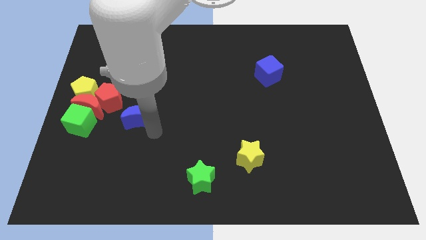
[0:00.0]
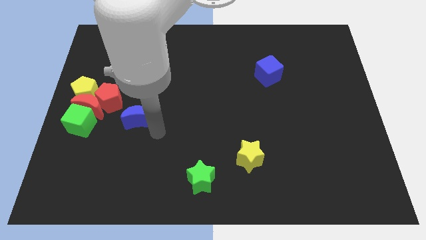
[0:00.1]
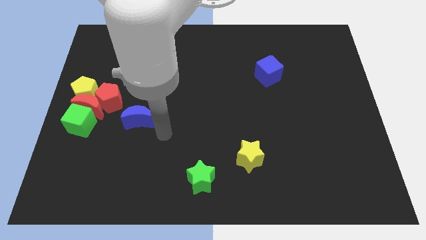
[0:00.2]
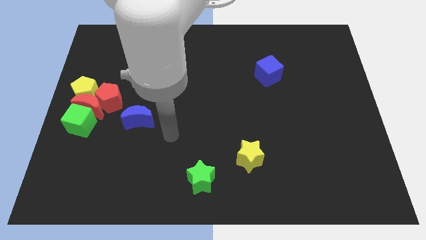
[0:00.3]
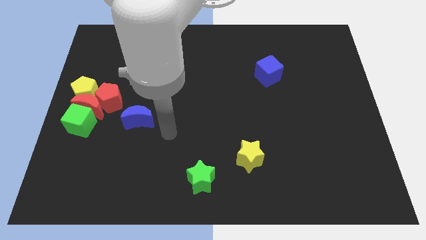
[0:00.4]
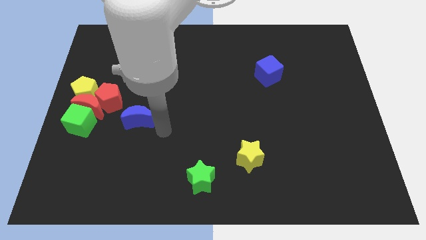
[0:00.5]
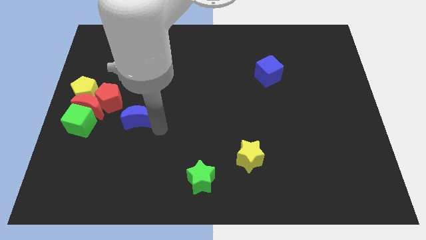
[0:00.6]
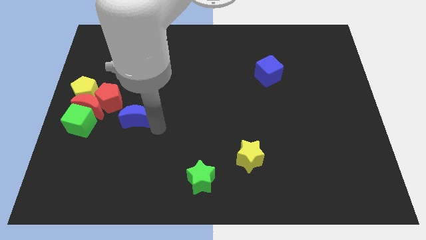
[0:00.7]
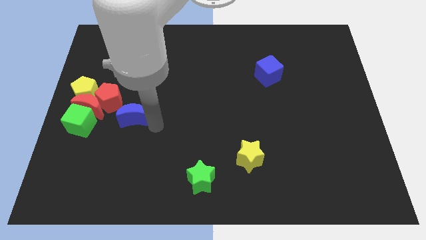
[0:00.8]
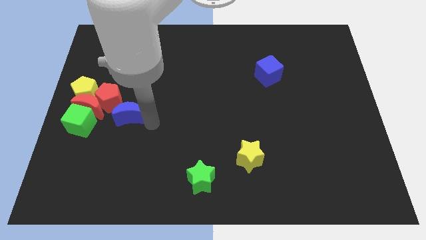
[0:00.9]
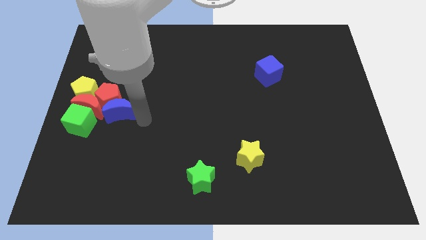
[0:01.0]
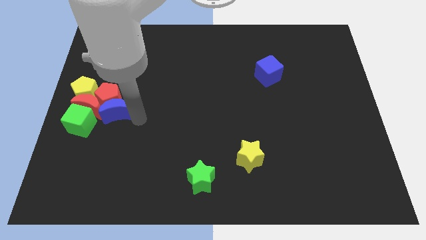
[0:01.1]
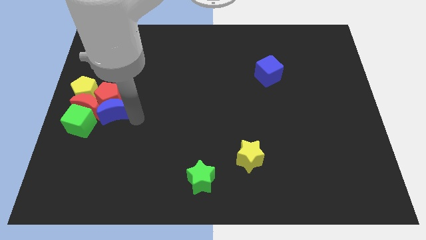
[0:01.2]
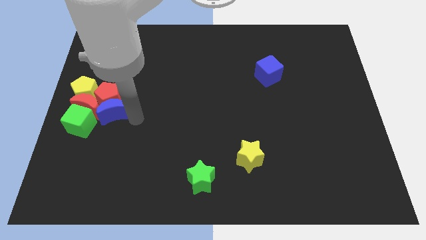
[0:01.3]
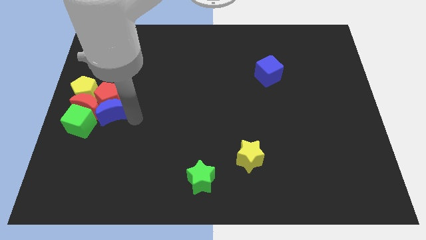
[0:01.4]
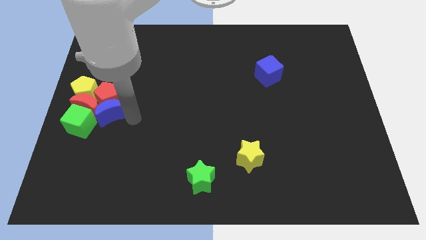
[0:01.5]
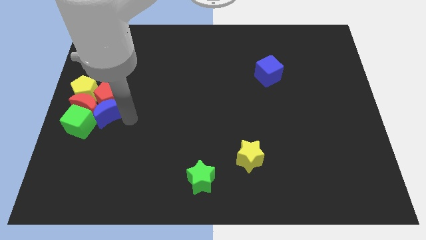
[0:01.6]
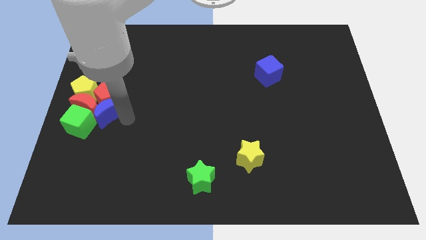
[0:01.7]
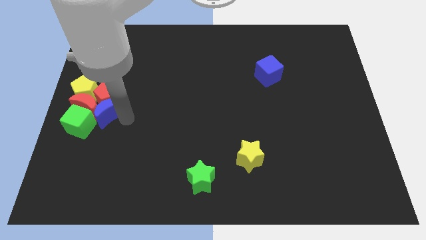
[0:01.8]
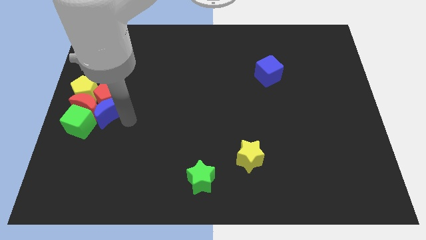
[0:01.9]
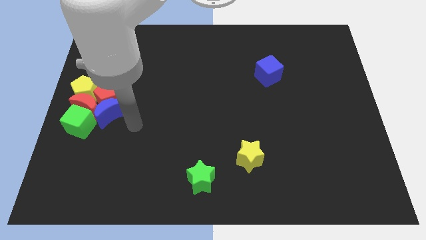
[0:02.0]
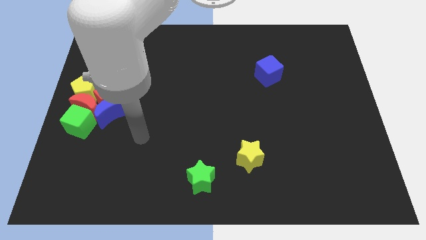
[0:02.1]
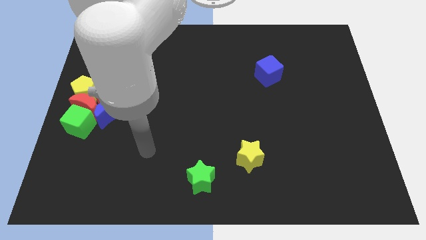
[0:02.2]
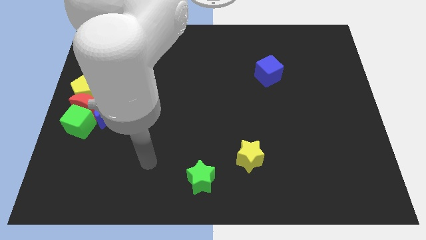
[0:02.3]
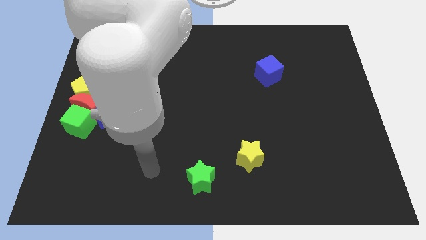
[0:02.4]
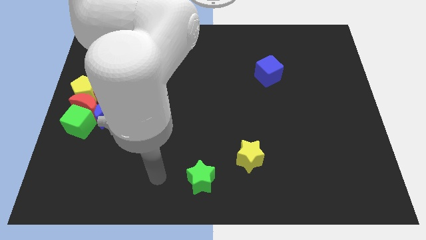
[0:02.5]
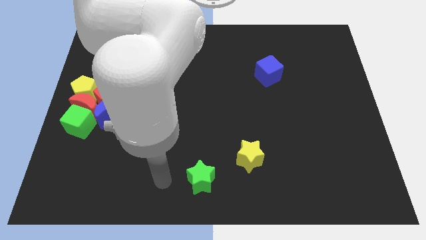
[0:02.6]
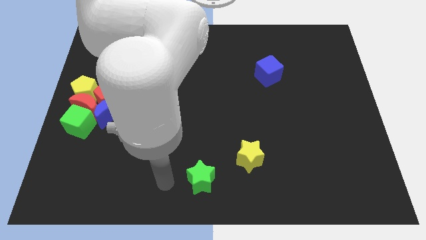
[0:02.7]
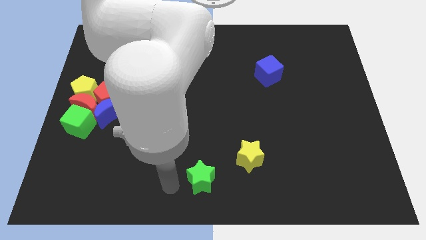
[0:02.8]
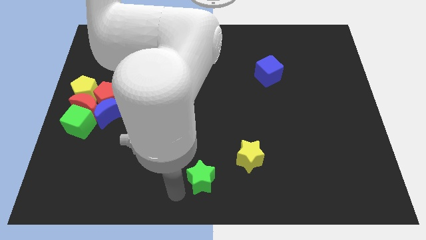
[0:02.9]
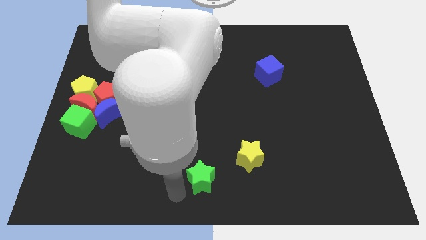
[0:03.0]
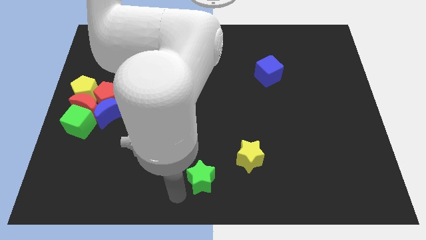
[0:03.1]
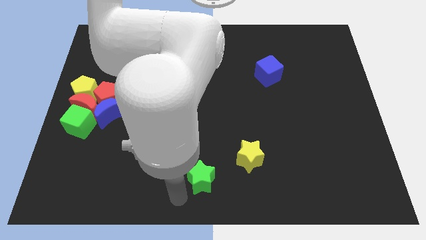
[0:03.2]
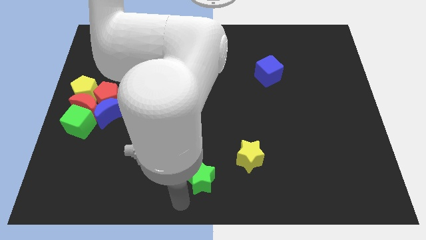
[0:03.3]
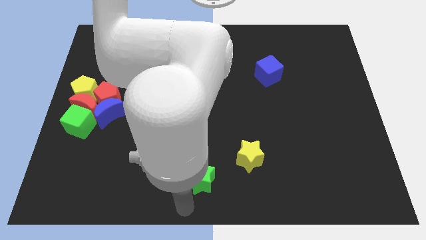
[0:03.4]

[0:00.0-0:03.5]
push the blue crescent to the right of the red crescent

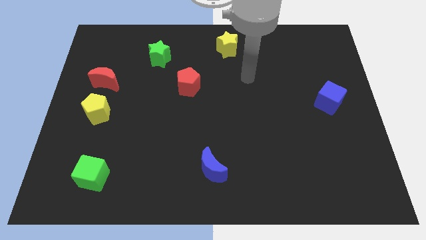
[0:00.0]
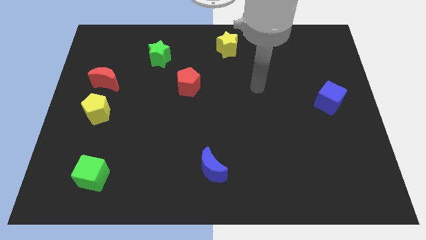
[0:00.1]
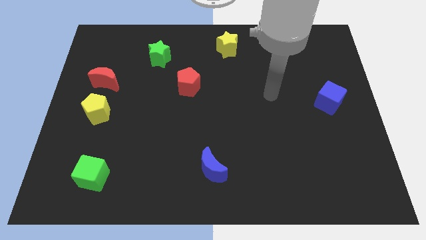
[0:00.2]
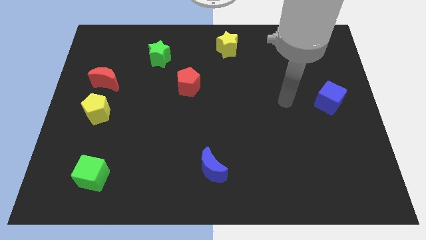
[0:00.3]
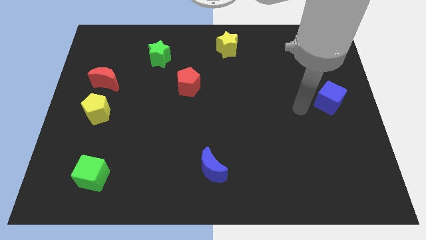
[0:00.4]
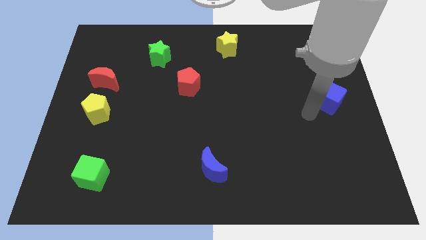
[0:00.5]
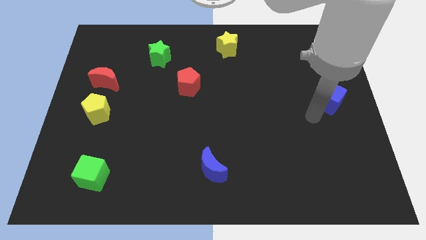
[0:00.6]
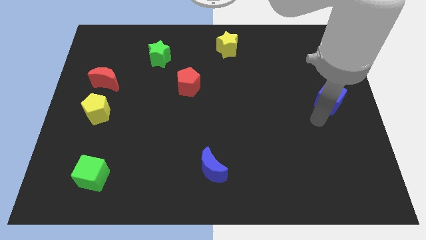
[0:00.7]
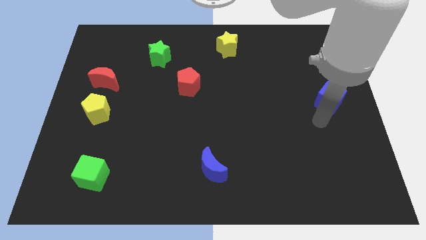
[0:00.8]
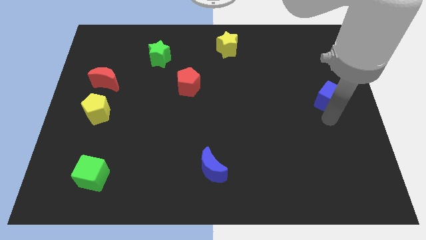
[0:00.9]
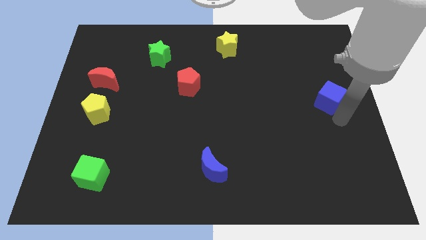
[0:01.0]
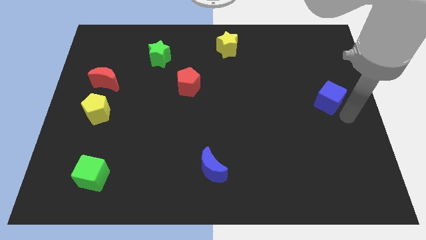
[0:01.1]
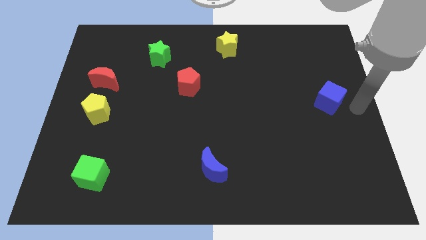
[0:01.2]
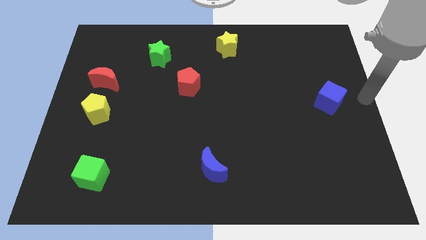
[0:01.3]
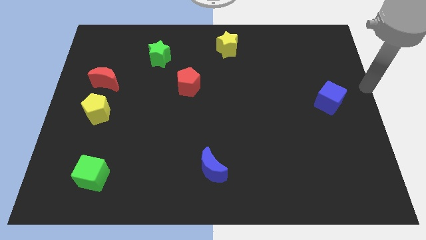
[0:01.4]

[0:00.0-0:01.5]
place your arm to the right center of the board

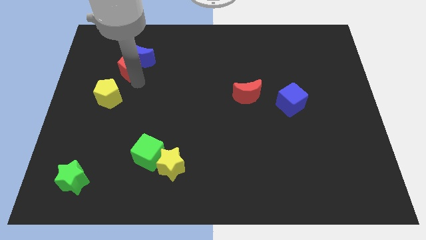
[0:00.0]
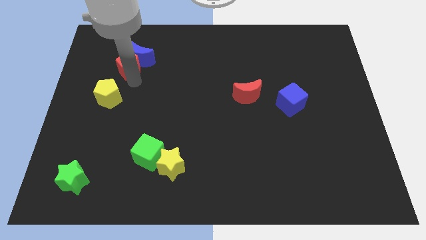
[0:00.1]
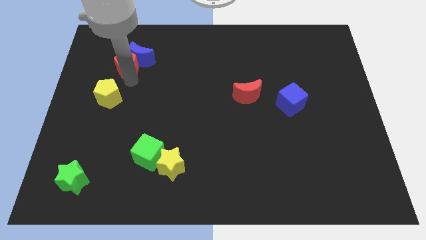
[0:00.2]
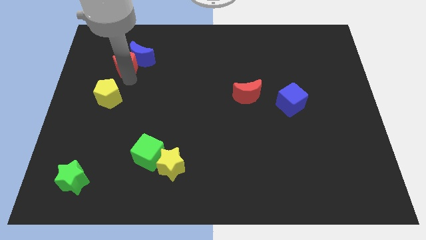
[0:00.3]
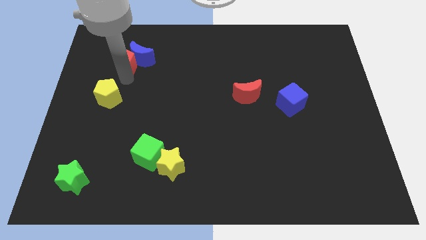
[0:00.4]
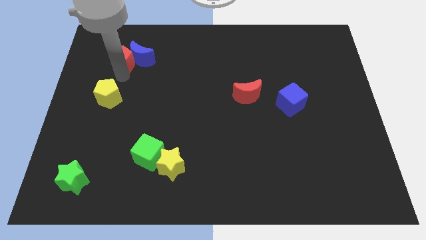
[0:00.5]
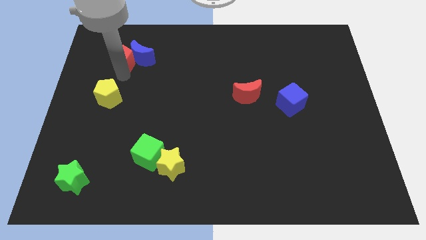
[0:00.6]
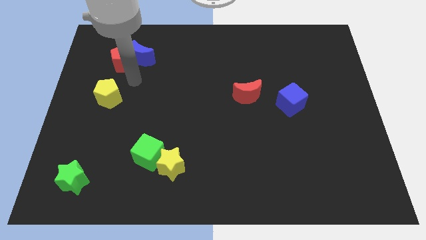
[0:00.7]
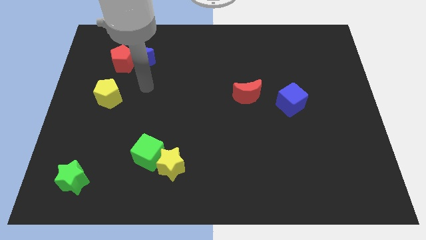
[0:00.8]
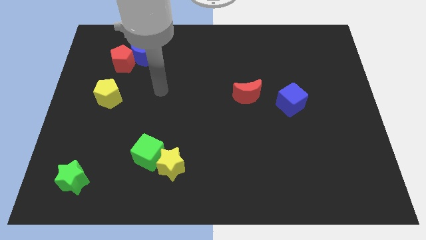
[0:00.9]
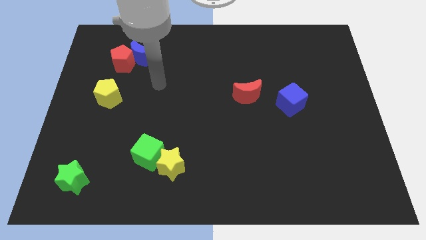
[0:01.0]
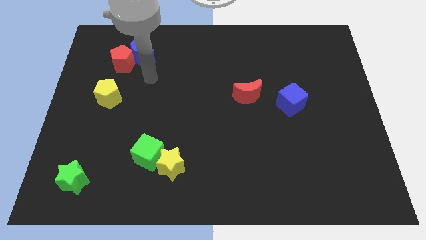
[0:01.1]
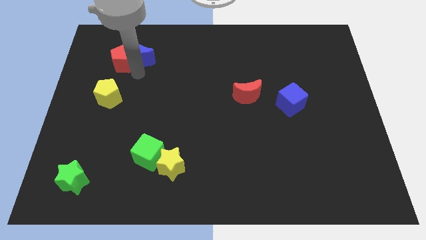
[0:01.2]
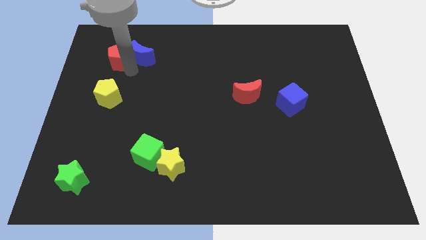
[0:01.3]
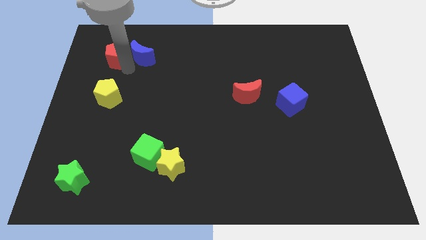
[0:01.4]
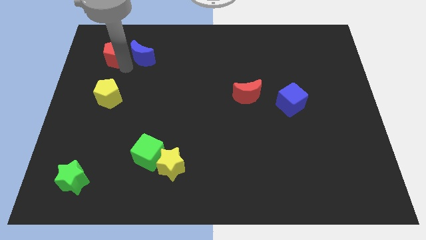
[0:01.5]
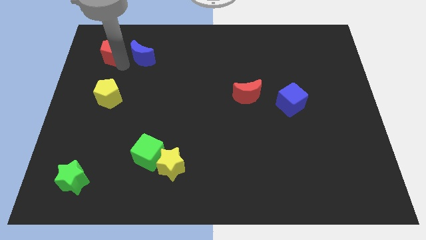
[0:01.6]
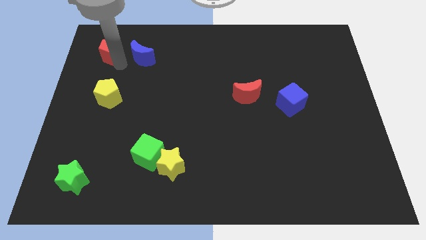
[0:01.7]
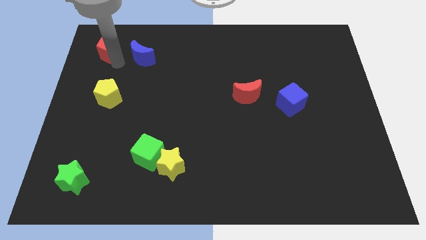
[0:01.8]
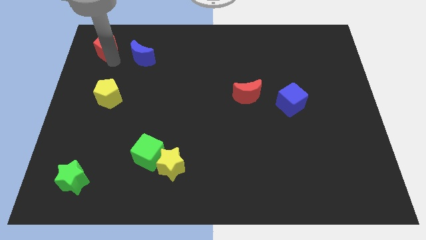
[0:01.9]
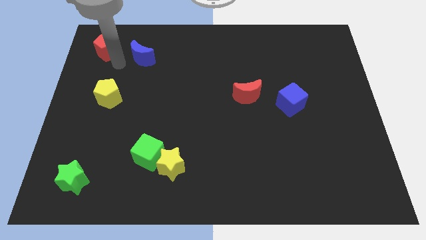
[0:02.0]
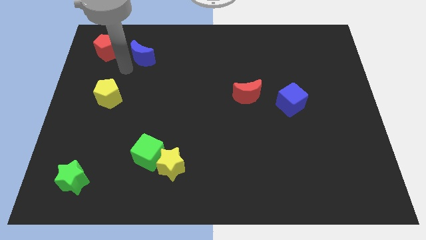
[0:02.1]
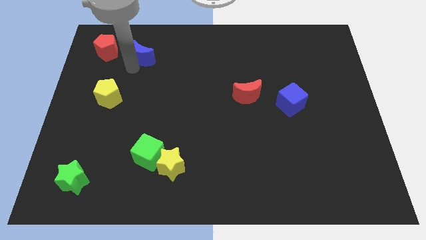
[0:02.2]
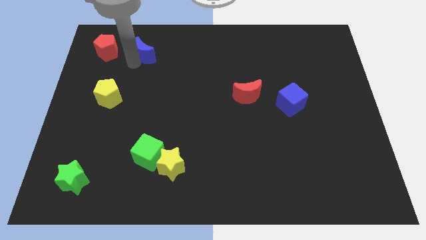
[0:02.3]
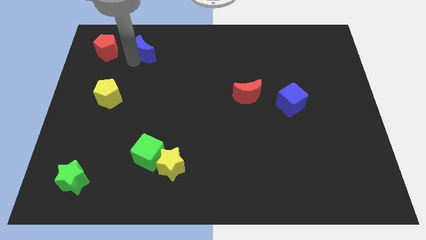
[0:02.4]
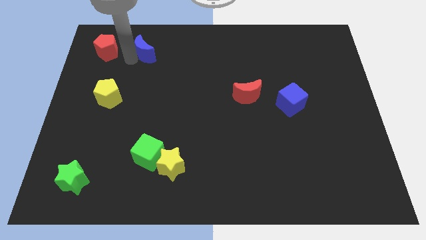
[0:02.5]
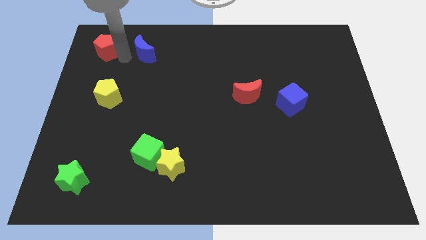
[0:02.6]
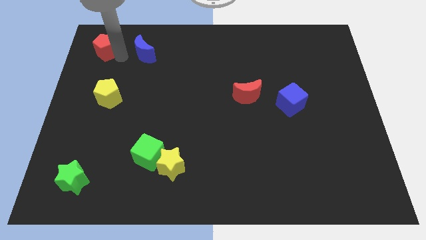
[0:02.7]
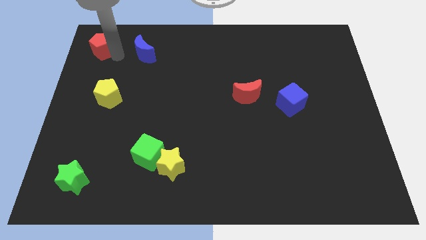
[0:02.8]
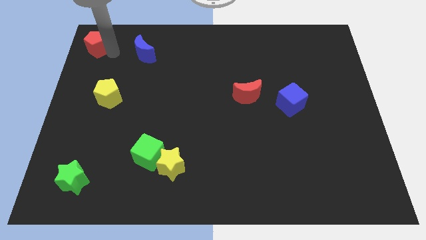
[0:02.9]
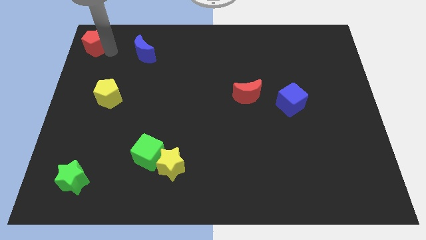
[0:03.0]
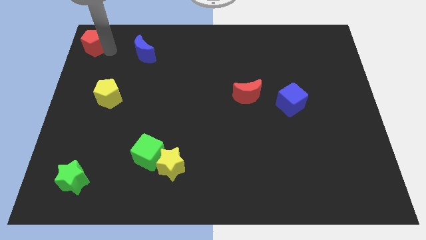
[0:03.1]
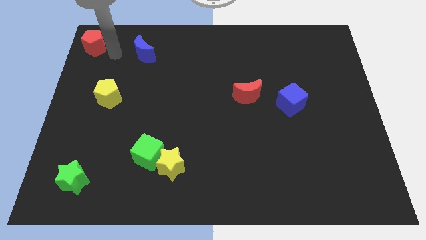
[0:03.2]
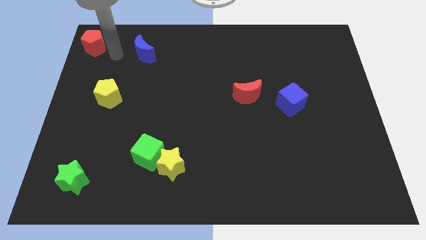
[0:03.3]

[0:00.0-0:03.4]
move the red pentagon diagonally top left to the yellow pentagon

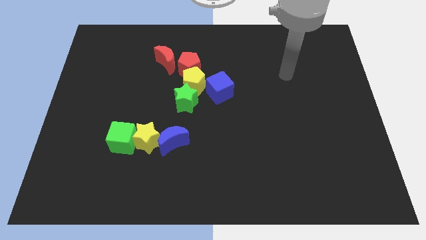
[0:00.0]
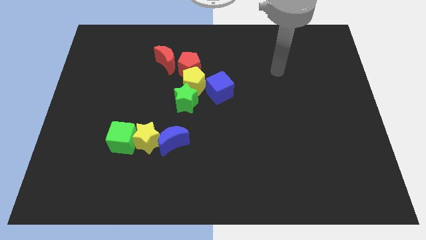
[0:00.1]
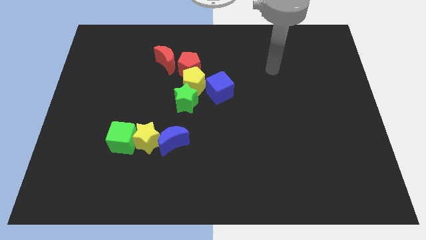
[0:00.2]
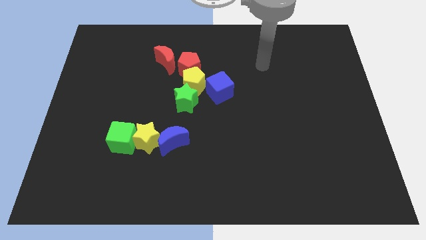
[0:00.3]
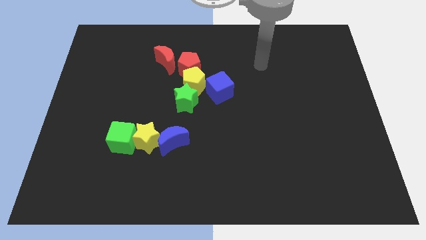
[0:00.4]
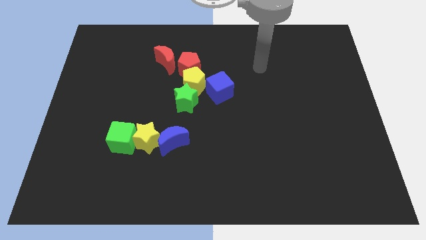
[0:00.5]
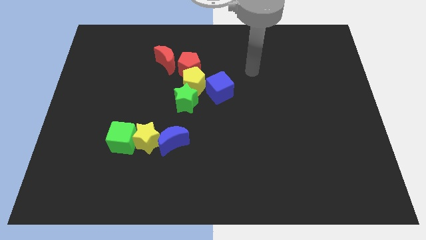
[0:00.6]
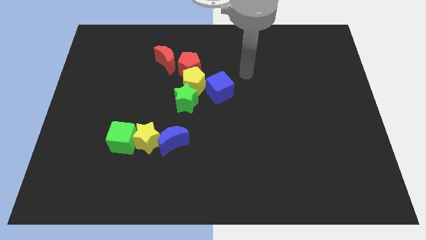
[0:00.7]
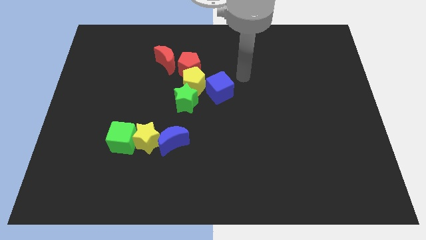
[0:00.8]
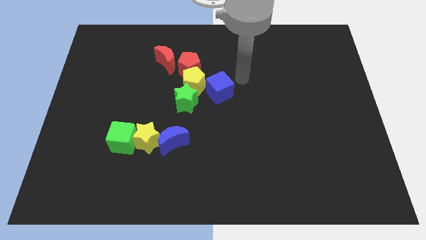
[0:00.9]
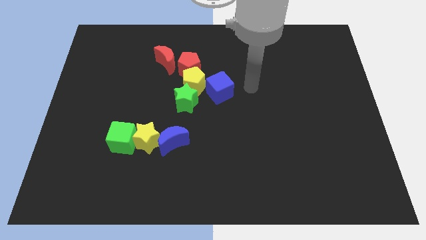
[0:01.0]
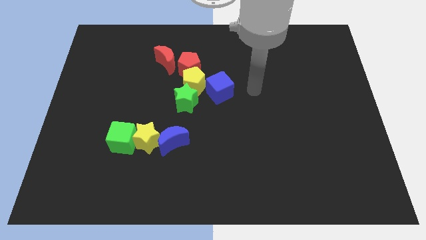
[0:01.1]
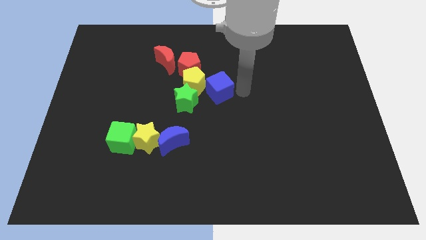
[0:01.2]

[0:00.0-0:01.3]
place the arm right to the blue cube
